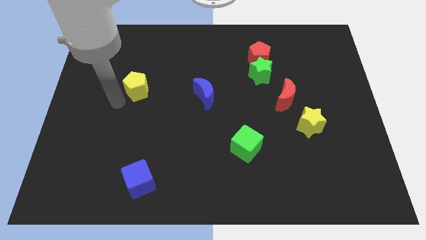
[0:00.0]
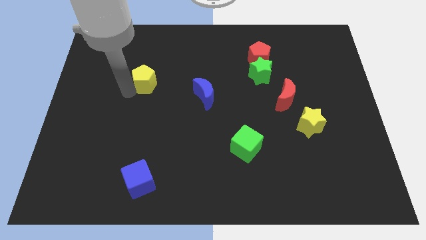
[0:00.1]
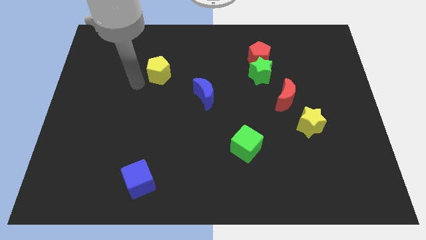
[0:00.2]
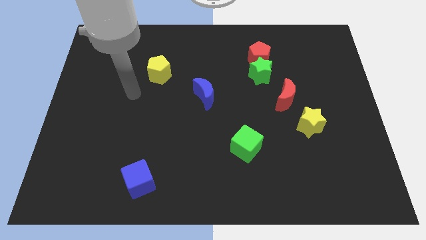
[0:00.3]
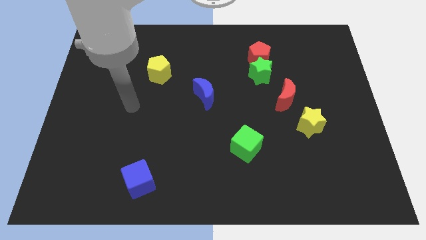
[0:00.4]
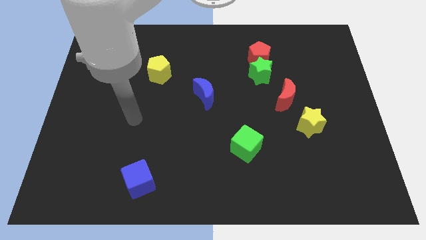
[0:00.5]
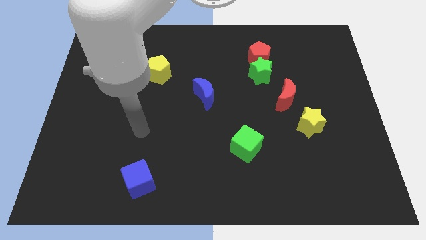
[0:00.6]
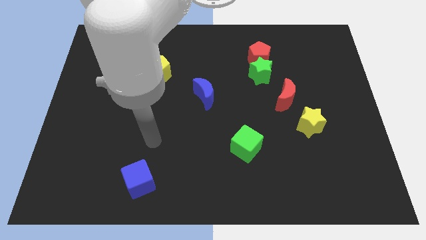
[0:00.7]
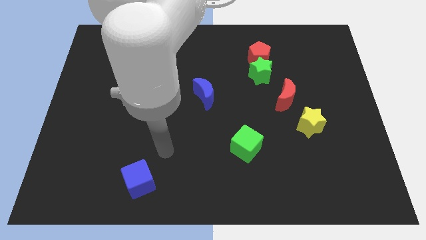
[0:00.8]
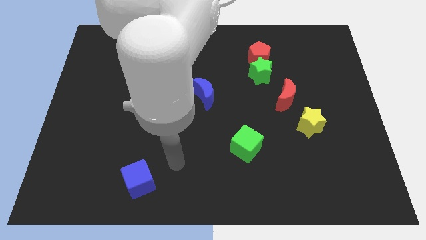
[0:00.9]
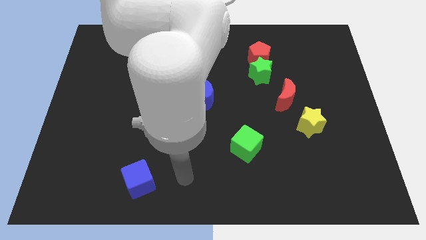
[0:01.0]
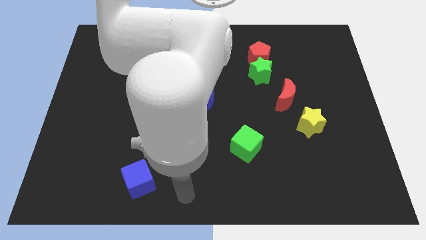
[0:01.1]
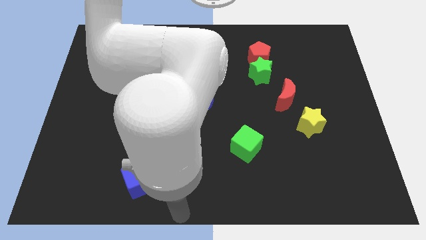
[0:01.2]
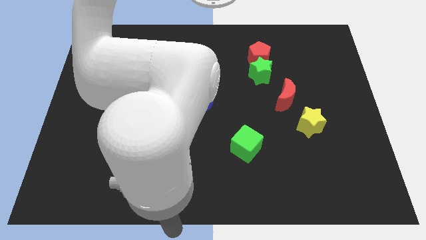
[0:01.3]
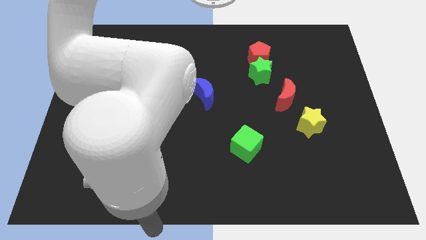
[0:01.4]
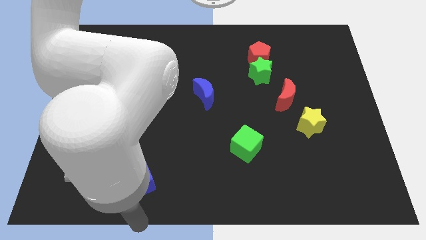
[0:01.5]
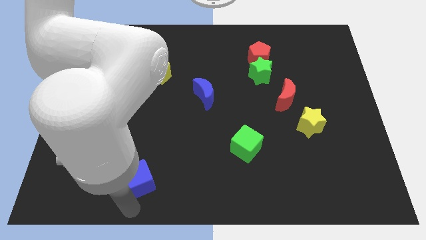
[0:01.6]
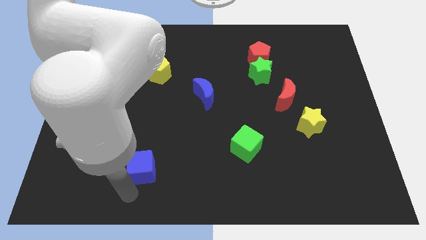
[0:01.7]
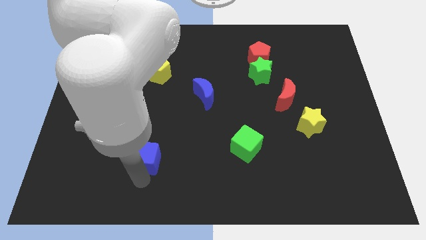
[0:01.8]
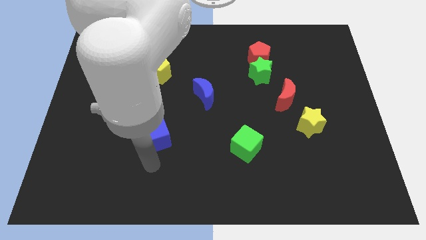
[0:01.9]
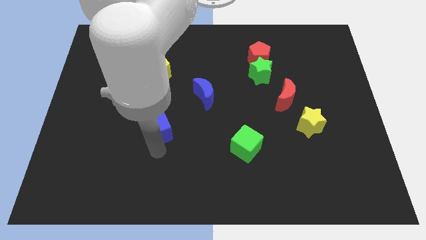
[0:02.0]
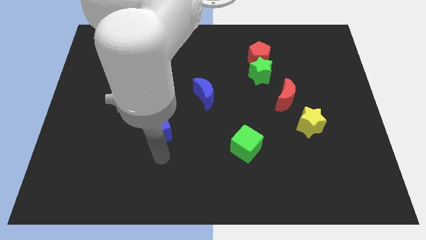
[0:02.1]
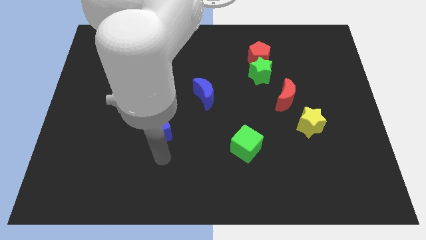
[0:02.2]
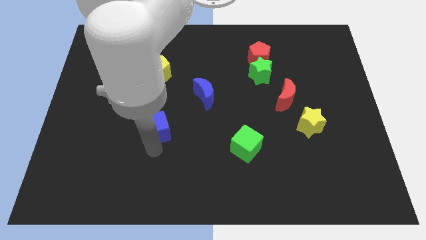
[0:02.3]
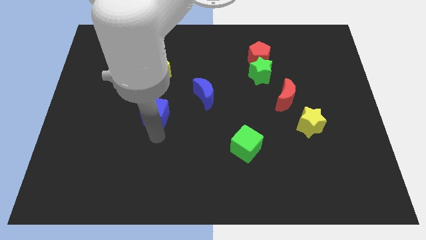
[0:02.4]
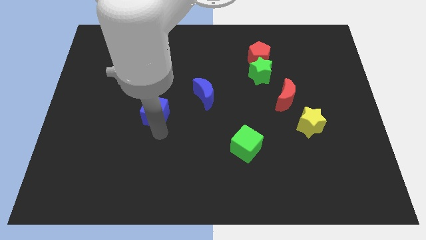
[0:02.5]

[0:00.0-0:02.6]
slide the blue cube towards the yellow pentagon

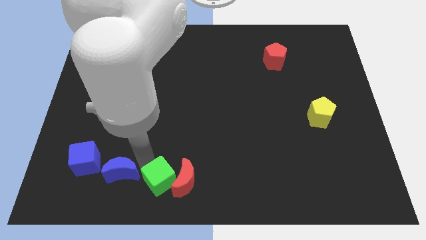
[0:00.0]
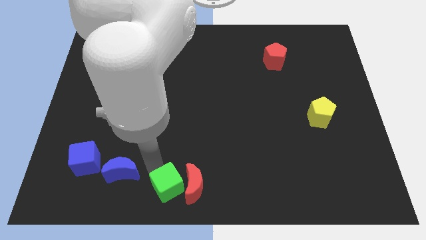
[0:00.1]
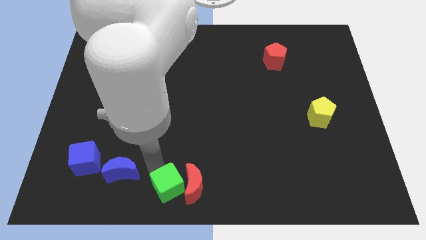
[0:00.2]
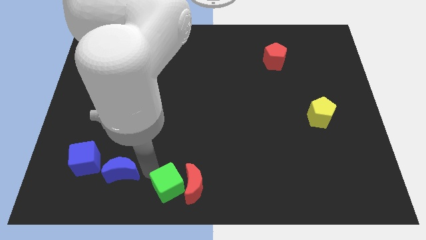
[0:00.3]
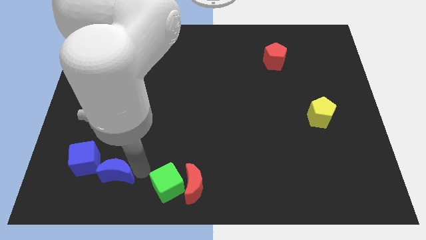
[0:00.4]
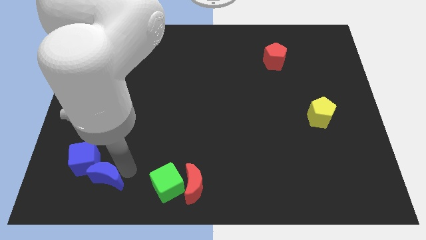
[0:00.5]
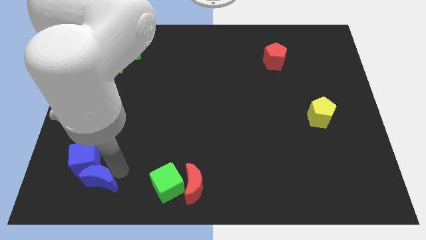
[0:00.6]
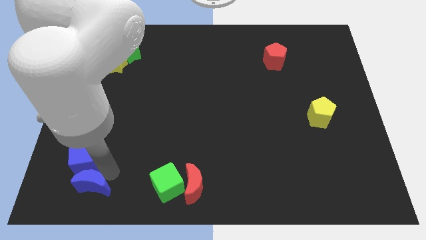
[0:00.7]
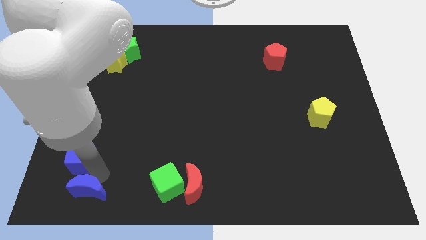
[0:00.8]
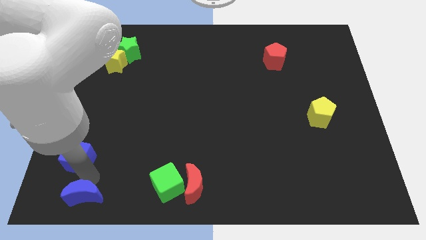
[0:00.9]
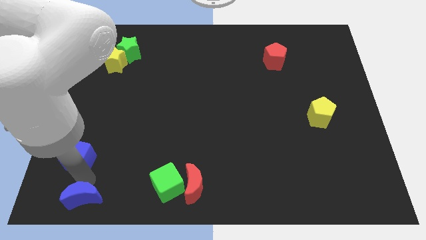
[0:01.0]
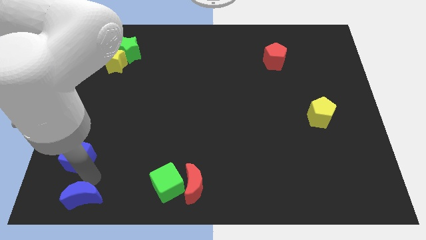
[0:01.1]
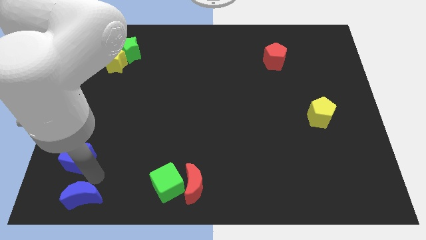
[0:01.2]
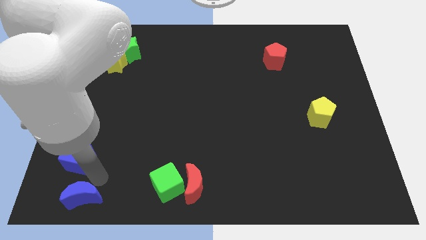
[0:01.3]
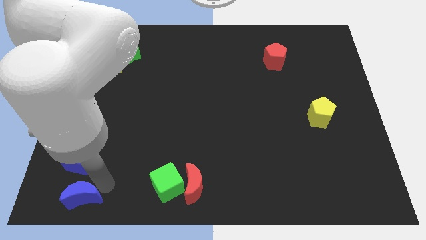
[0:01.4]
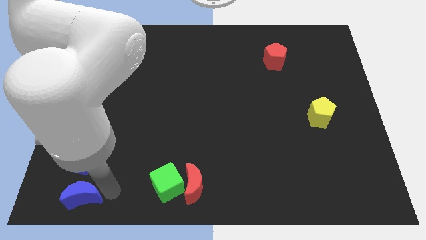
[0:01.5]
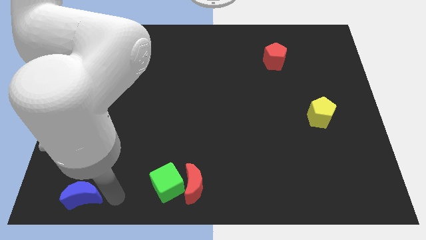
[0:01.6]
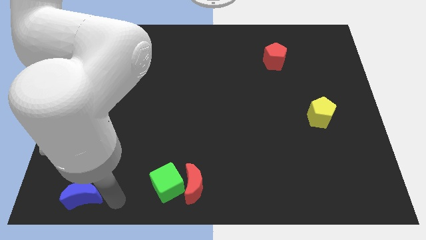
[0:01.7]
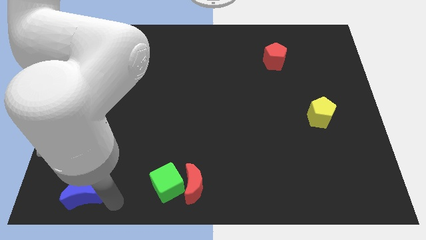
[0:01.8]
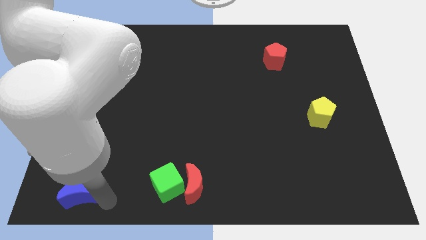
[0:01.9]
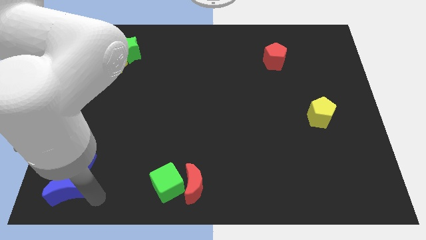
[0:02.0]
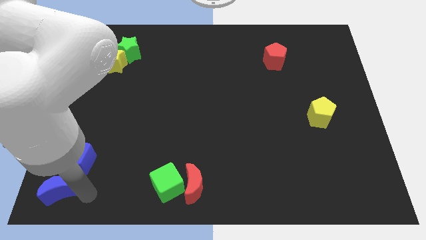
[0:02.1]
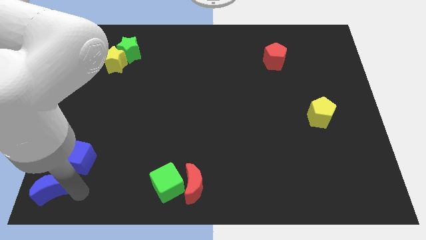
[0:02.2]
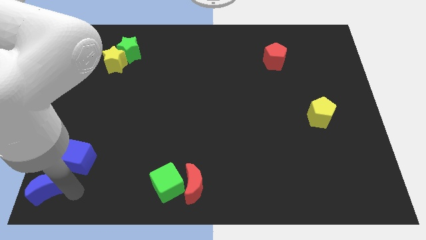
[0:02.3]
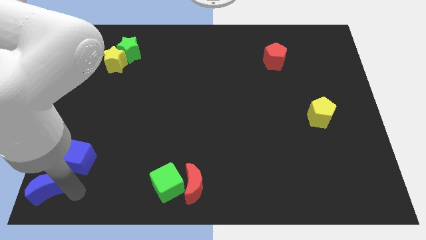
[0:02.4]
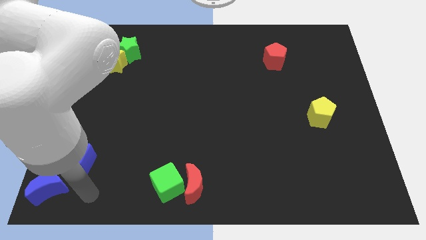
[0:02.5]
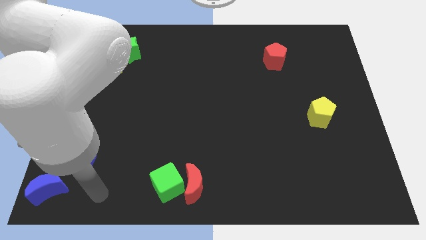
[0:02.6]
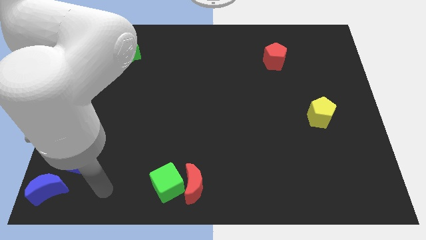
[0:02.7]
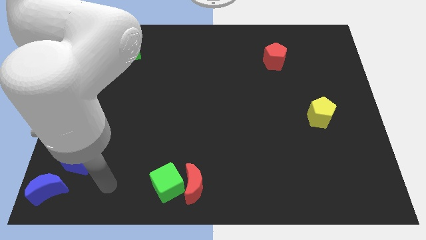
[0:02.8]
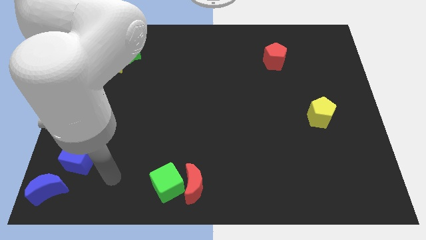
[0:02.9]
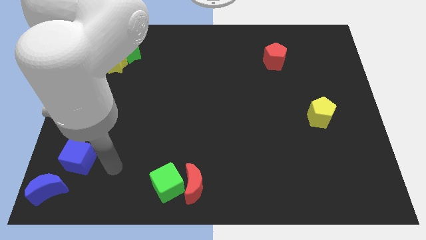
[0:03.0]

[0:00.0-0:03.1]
separate the blue blocks and green cube from each other

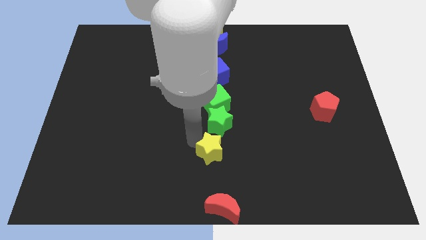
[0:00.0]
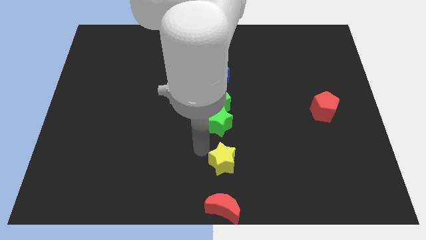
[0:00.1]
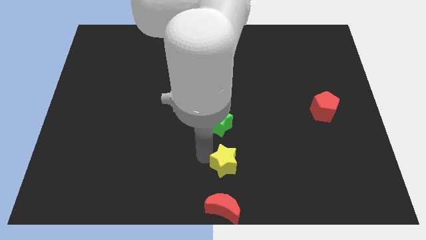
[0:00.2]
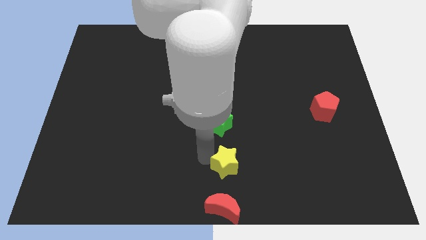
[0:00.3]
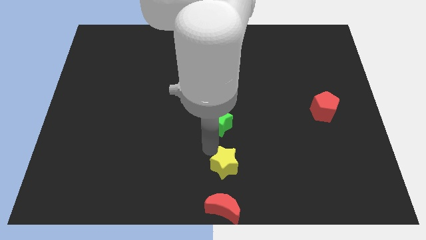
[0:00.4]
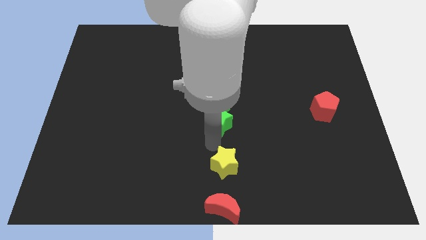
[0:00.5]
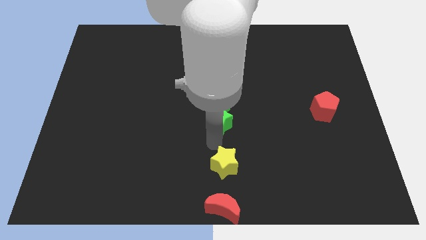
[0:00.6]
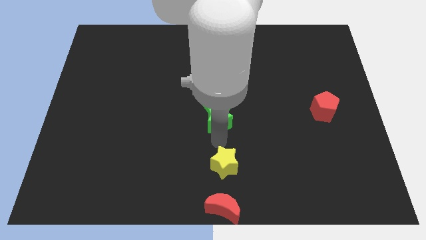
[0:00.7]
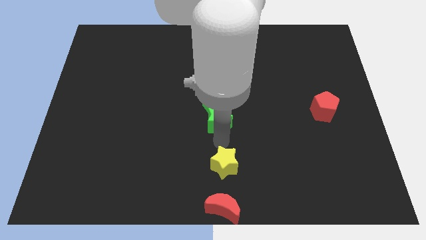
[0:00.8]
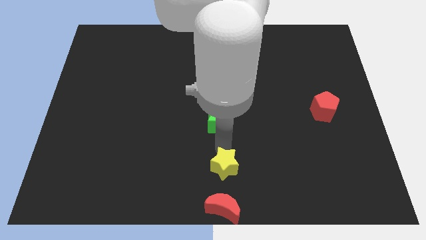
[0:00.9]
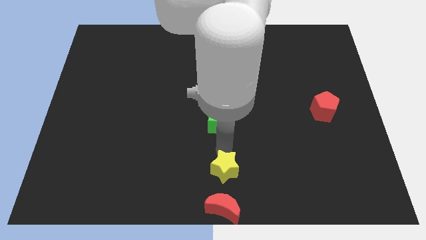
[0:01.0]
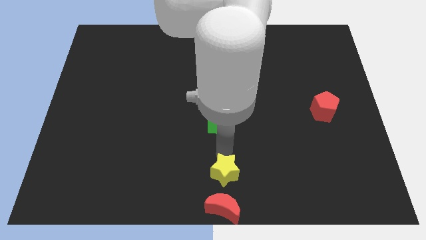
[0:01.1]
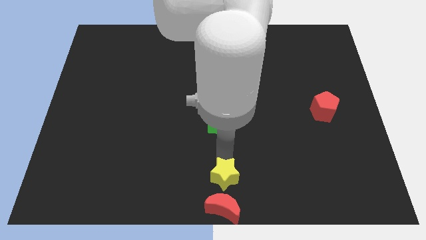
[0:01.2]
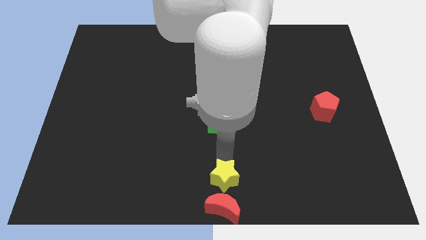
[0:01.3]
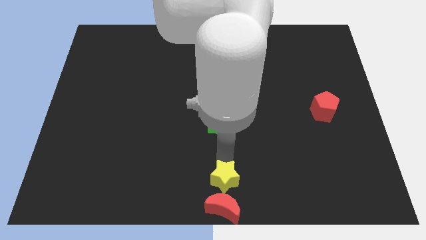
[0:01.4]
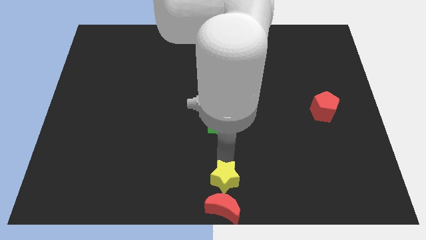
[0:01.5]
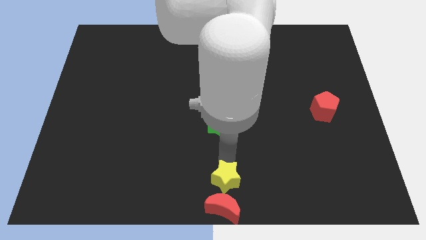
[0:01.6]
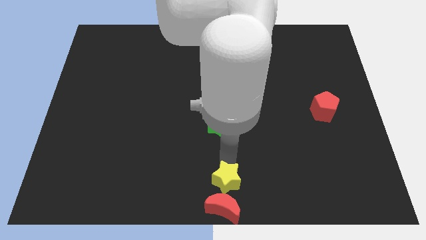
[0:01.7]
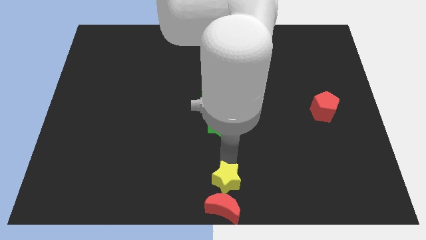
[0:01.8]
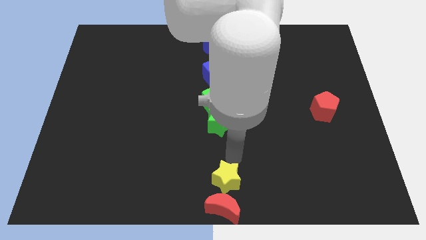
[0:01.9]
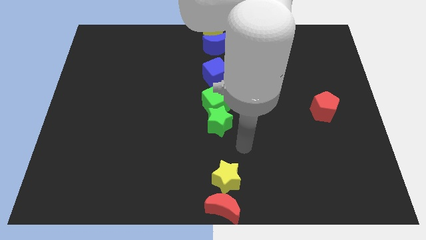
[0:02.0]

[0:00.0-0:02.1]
move the yellow star towards the top of the red crescent

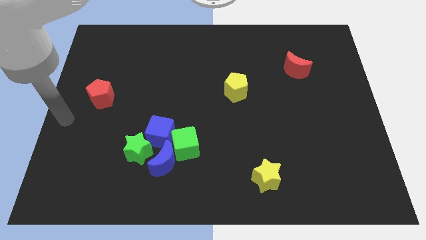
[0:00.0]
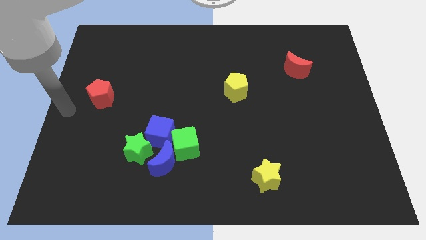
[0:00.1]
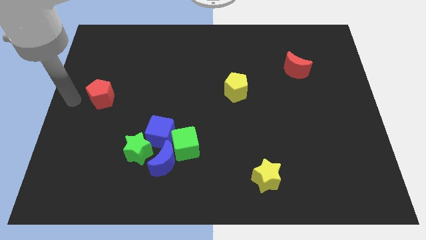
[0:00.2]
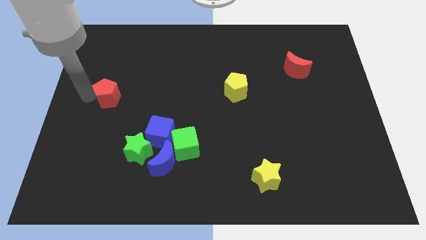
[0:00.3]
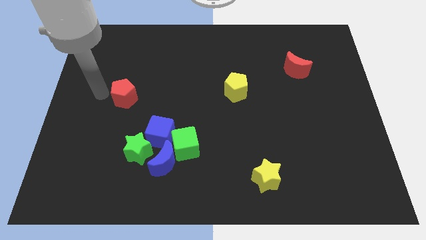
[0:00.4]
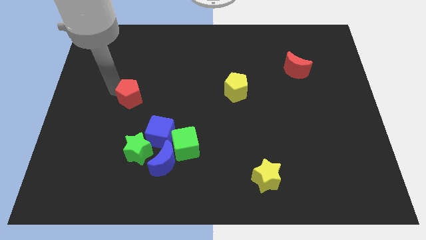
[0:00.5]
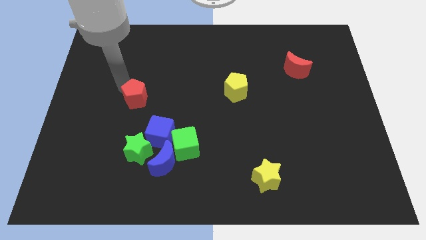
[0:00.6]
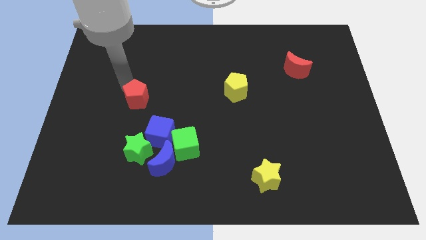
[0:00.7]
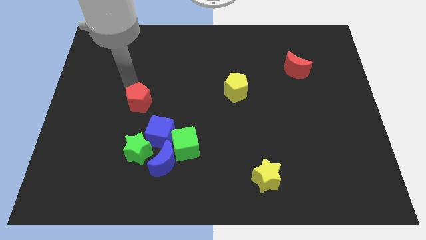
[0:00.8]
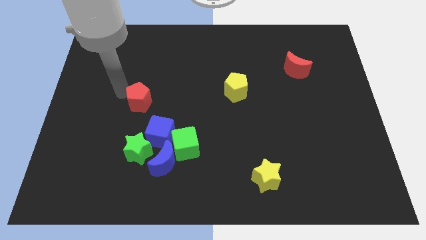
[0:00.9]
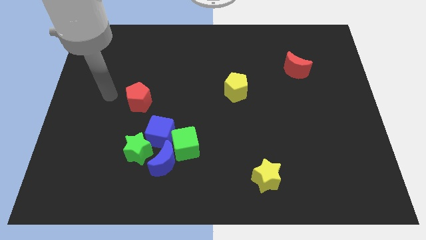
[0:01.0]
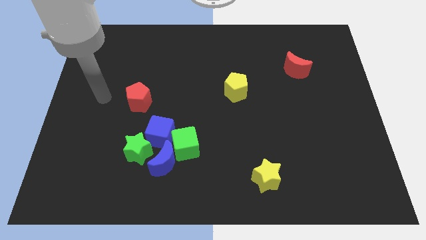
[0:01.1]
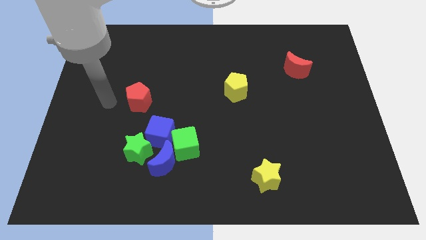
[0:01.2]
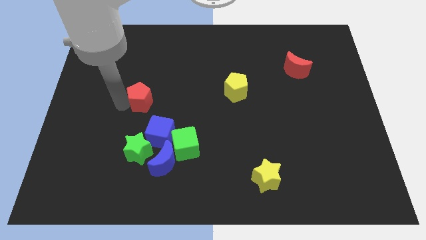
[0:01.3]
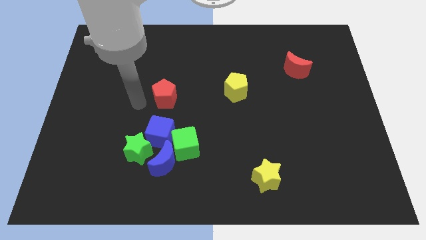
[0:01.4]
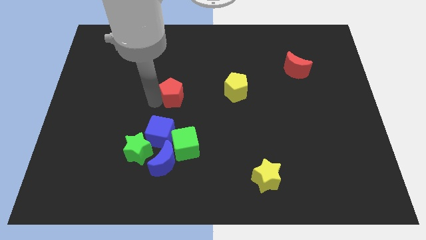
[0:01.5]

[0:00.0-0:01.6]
move the red pentagon to the top of the blue cube
